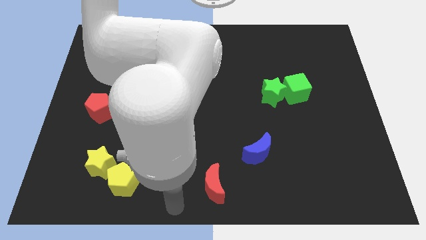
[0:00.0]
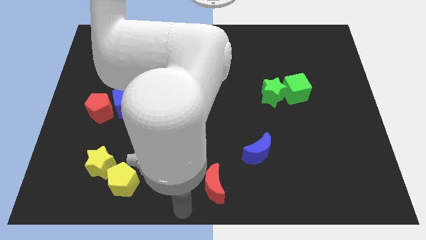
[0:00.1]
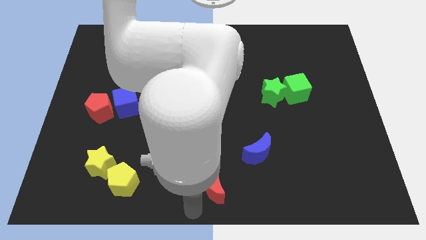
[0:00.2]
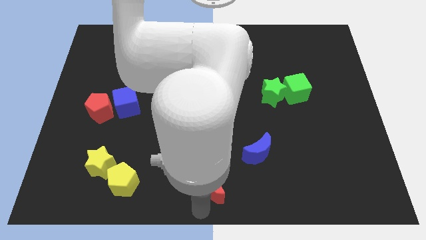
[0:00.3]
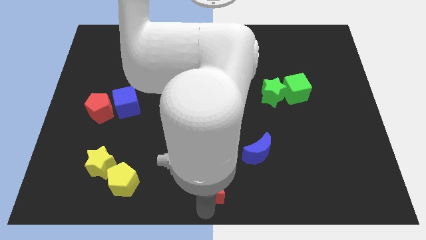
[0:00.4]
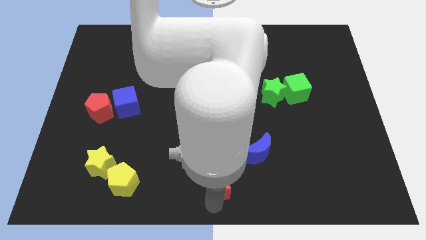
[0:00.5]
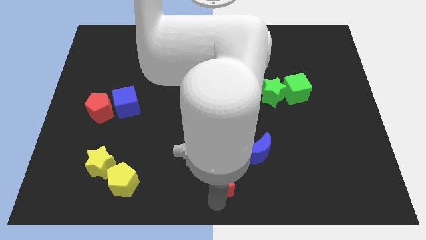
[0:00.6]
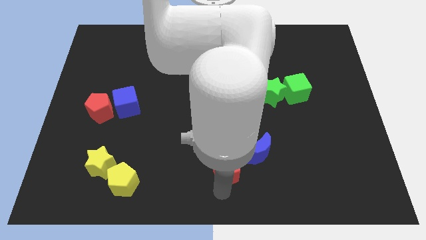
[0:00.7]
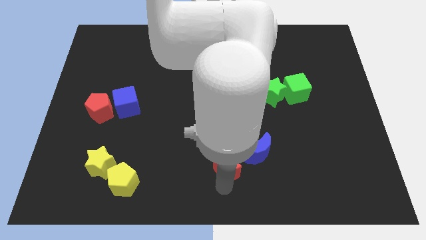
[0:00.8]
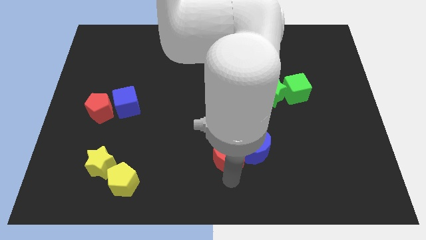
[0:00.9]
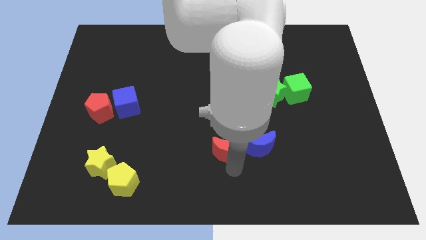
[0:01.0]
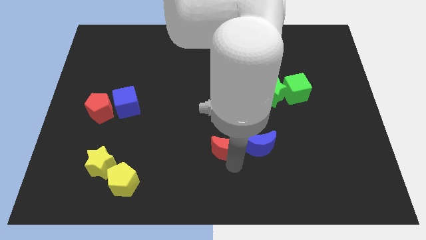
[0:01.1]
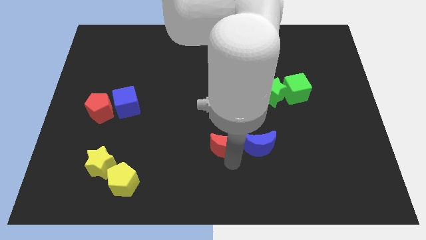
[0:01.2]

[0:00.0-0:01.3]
push the red crecent into blue moon

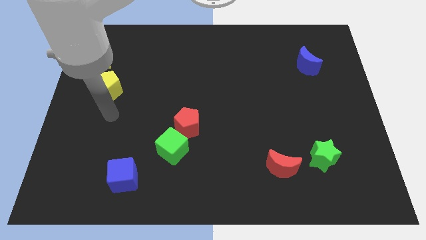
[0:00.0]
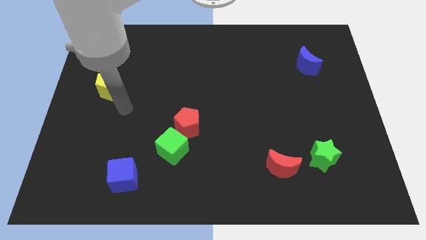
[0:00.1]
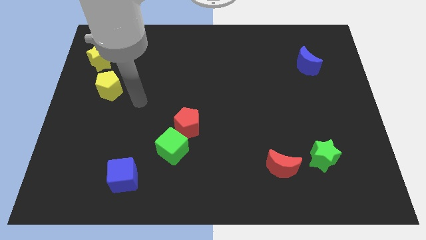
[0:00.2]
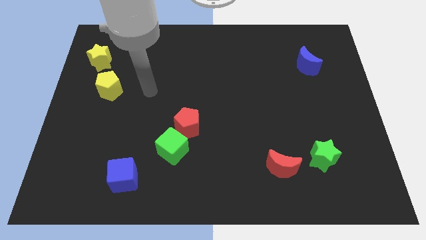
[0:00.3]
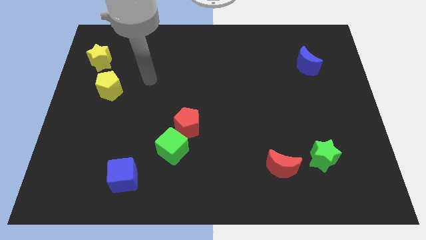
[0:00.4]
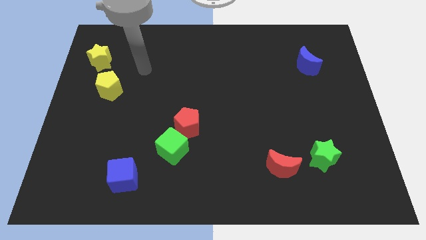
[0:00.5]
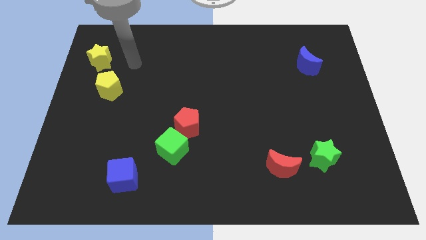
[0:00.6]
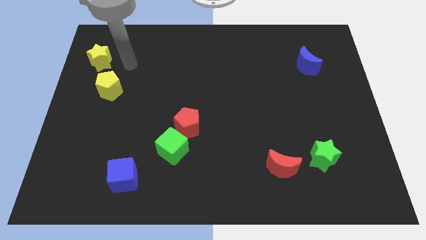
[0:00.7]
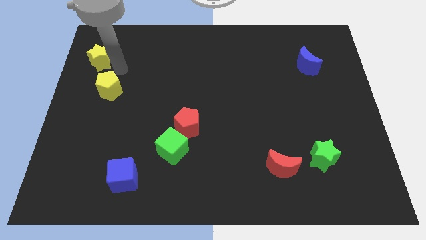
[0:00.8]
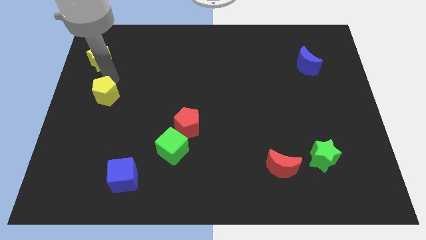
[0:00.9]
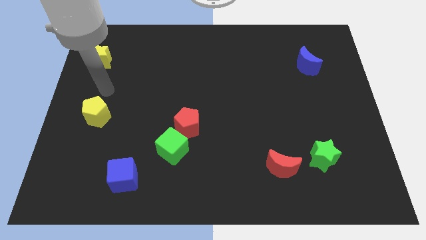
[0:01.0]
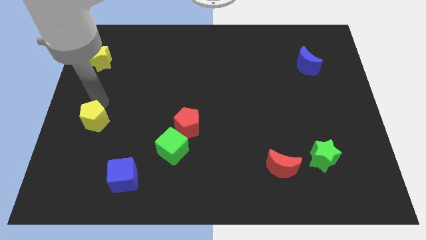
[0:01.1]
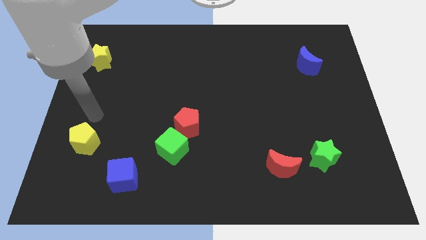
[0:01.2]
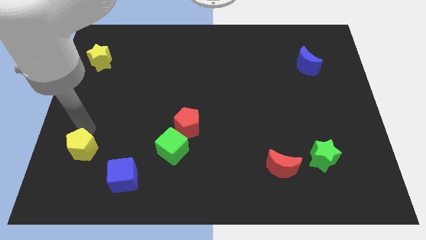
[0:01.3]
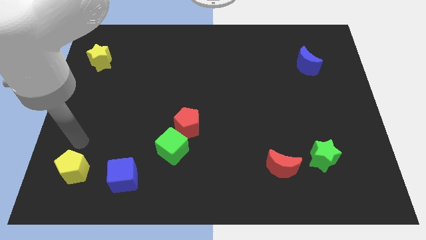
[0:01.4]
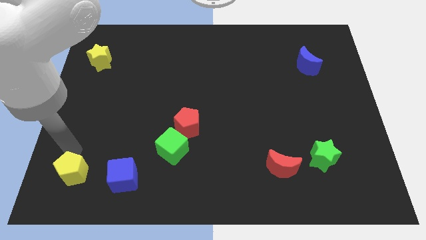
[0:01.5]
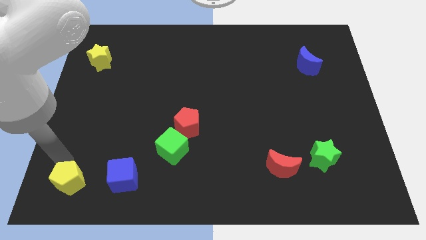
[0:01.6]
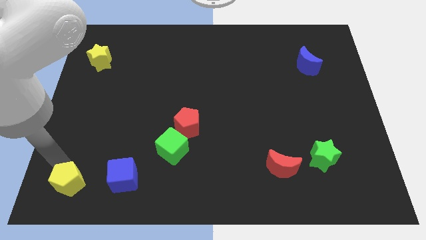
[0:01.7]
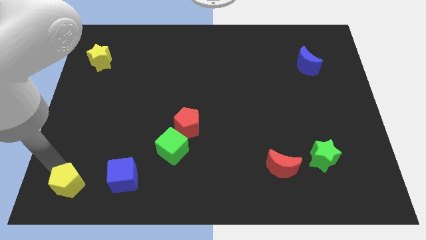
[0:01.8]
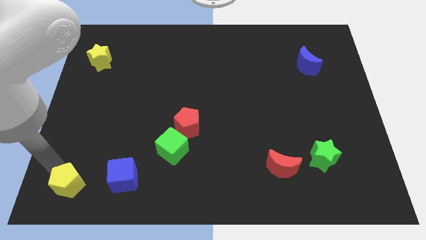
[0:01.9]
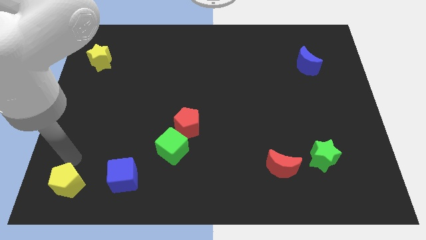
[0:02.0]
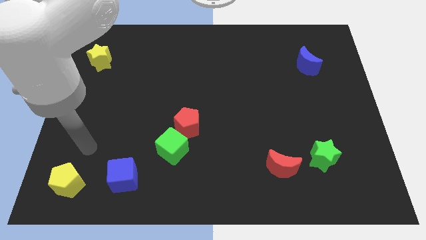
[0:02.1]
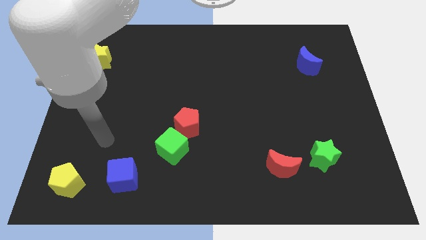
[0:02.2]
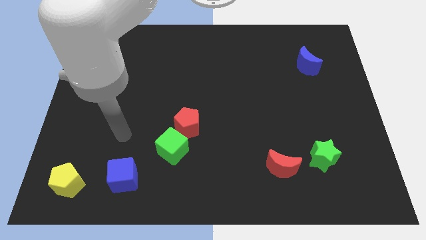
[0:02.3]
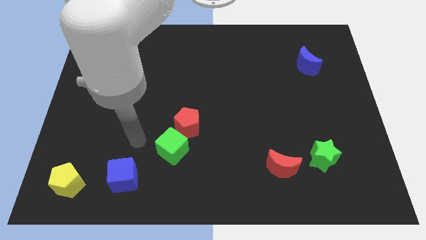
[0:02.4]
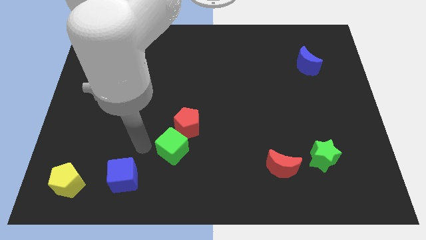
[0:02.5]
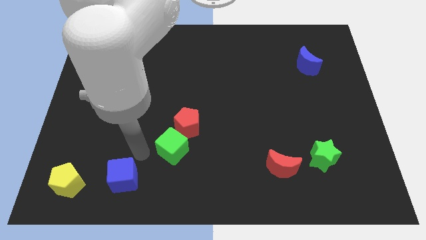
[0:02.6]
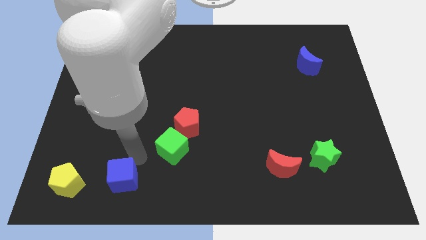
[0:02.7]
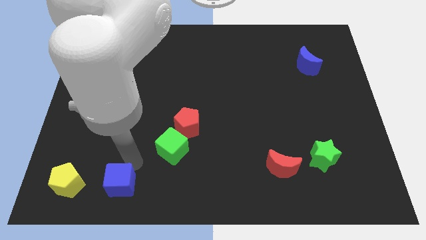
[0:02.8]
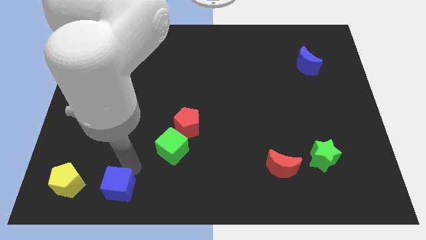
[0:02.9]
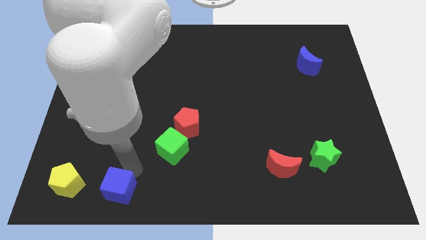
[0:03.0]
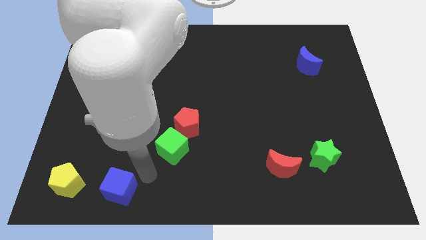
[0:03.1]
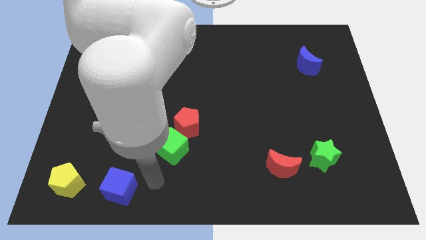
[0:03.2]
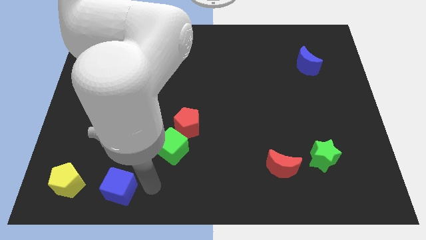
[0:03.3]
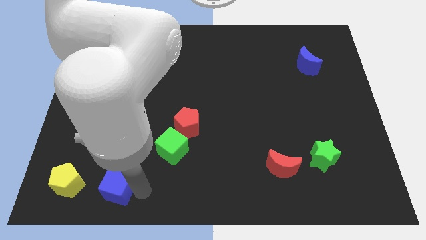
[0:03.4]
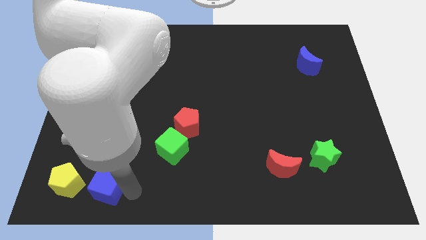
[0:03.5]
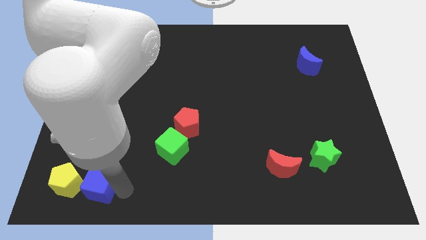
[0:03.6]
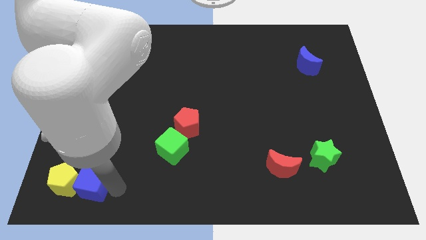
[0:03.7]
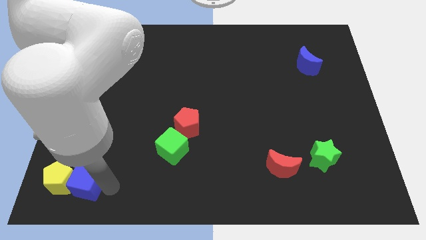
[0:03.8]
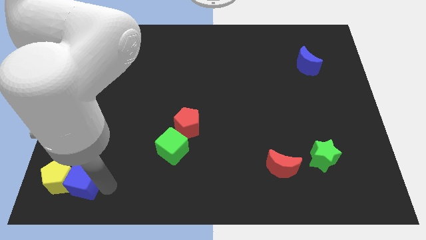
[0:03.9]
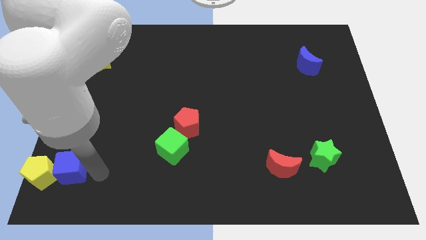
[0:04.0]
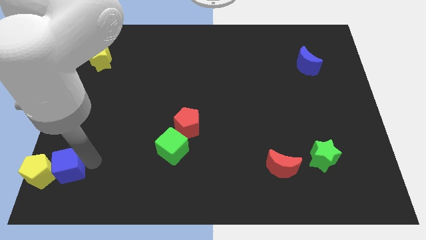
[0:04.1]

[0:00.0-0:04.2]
push the yellow pentagon towards the bottom of the board

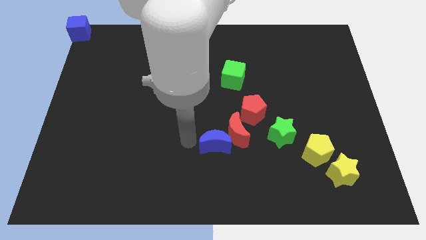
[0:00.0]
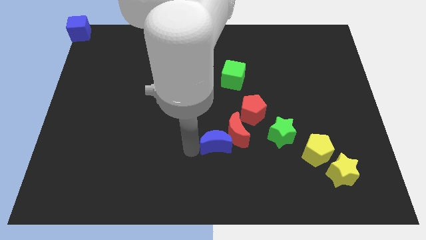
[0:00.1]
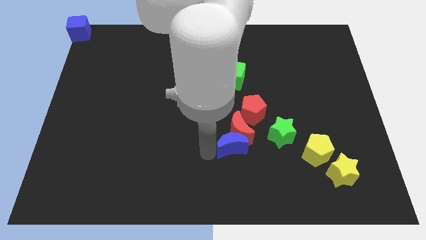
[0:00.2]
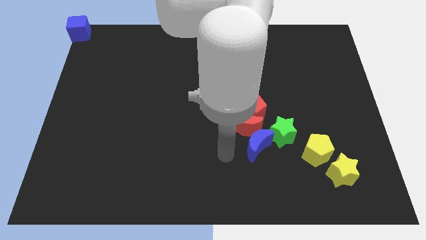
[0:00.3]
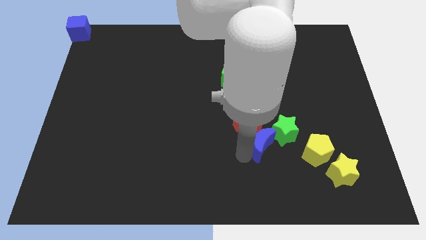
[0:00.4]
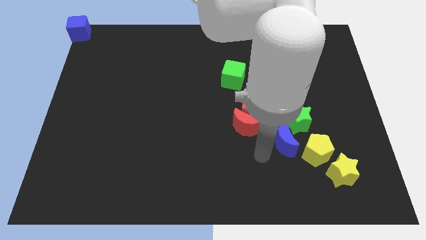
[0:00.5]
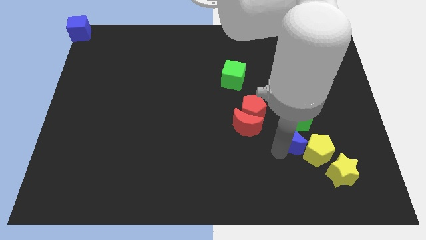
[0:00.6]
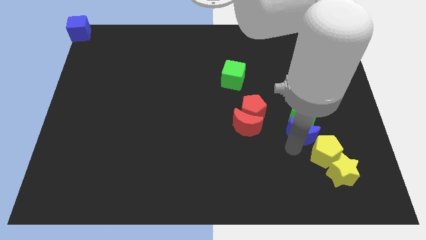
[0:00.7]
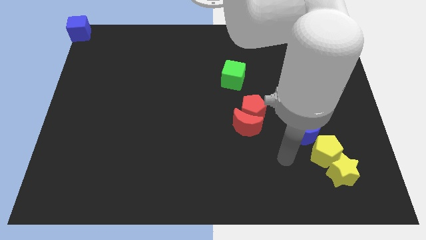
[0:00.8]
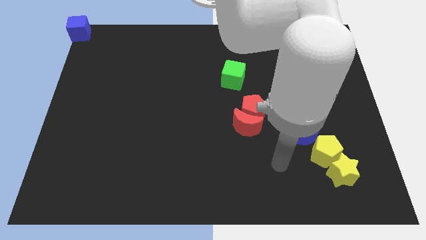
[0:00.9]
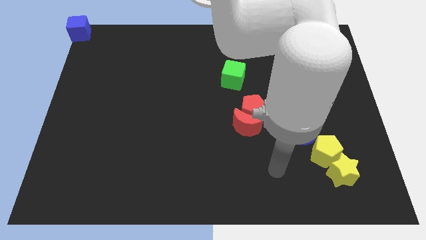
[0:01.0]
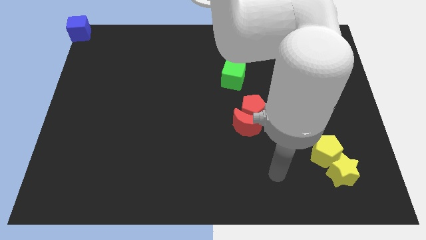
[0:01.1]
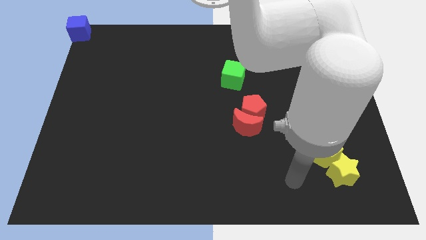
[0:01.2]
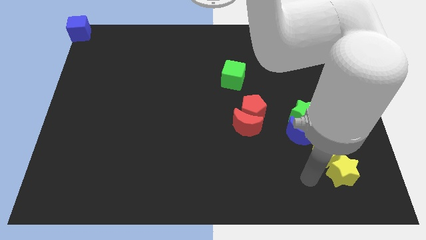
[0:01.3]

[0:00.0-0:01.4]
move blue moon into the green star

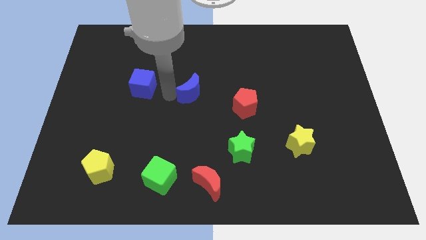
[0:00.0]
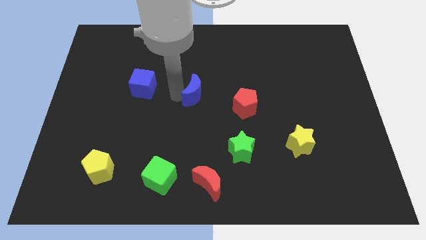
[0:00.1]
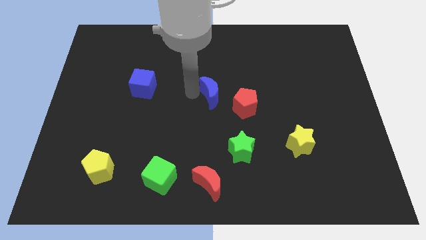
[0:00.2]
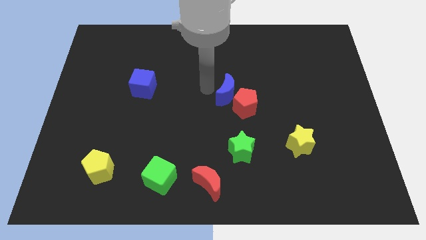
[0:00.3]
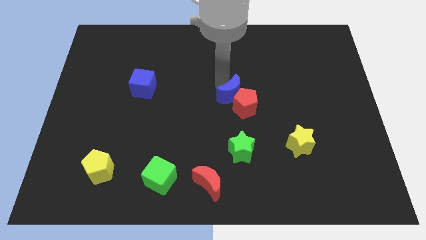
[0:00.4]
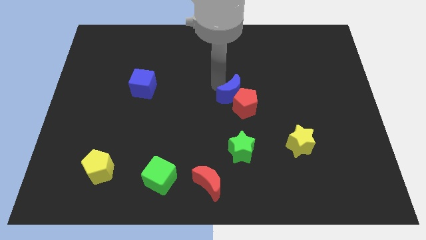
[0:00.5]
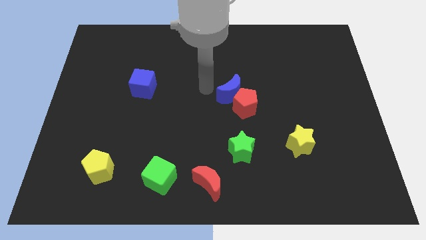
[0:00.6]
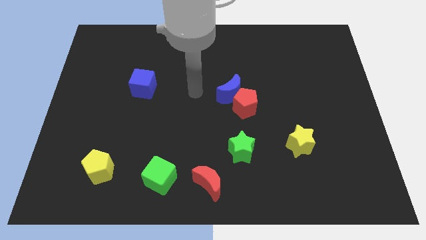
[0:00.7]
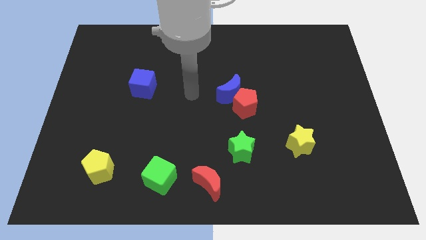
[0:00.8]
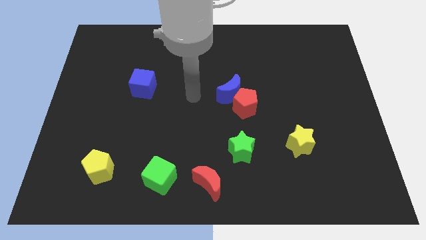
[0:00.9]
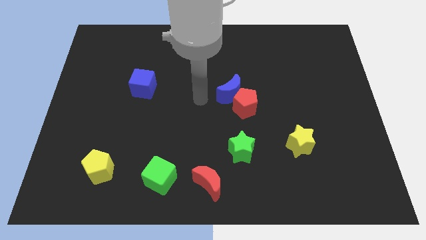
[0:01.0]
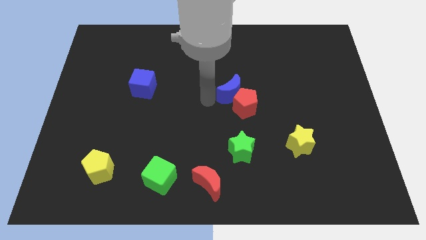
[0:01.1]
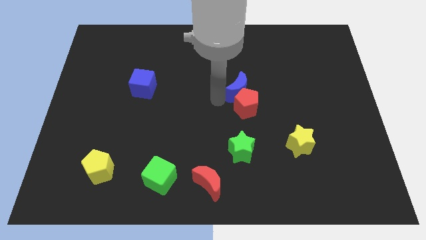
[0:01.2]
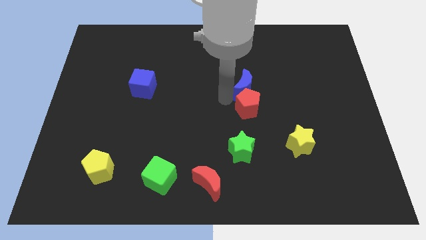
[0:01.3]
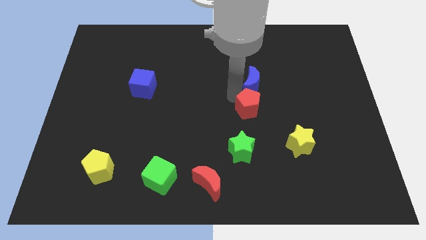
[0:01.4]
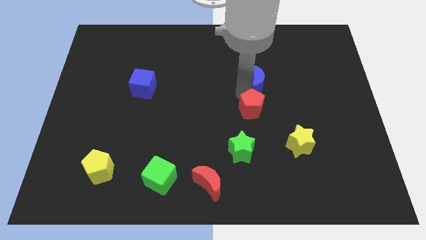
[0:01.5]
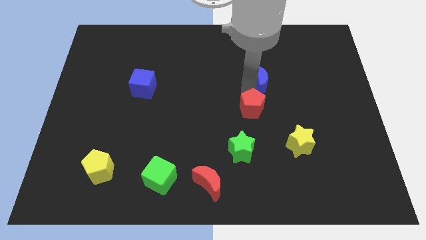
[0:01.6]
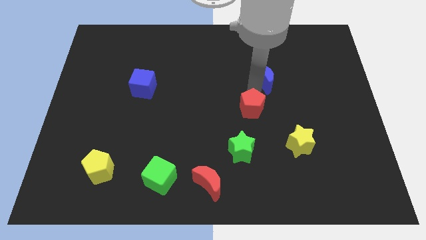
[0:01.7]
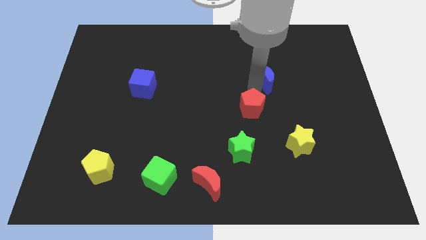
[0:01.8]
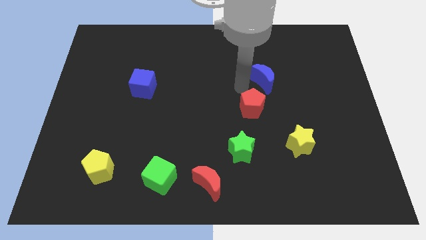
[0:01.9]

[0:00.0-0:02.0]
push the blue crescent to the top right of red pentagon

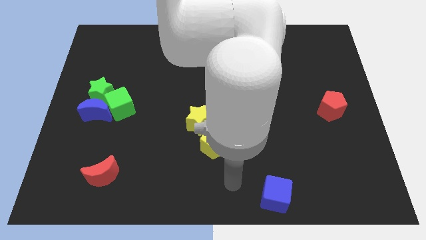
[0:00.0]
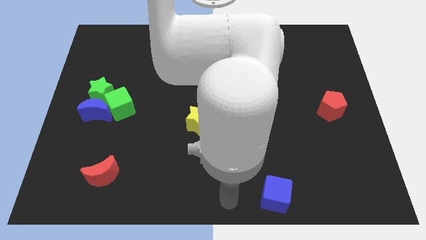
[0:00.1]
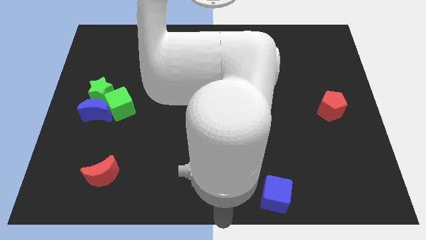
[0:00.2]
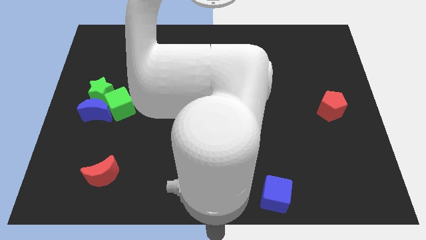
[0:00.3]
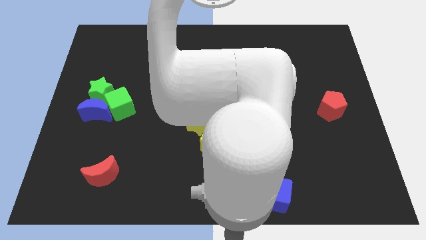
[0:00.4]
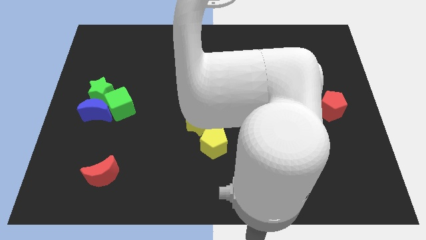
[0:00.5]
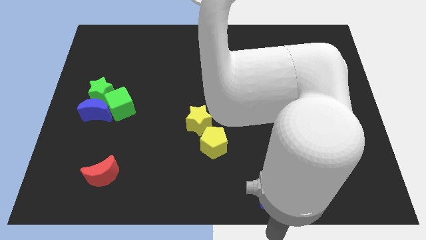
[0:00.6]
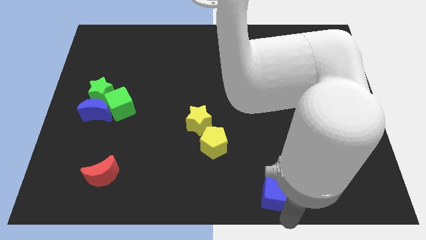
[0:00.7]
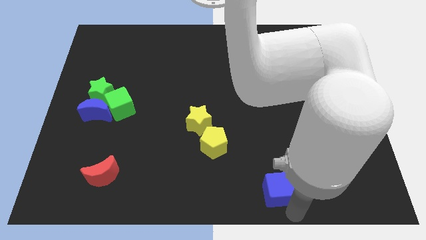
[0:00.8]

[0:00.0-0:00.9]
move your arm bottom of the blue cube
